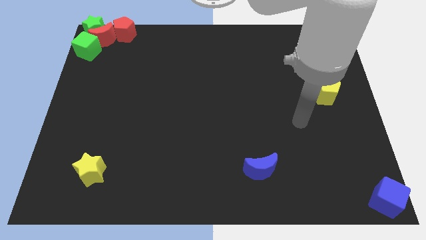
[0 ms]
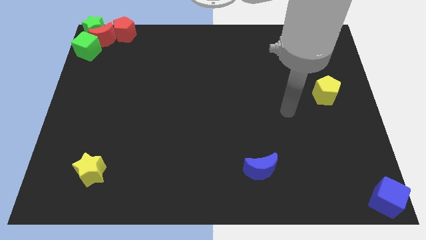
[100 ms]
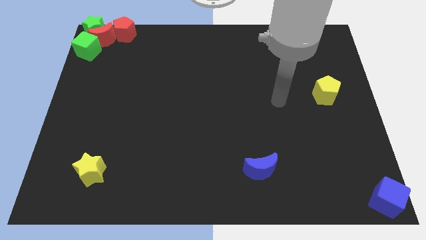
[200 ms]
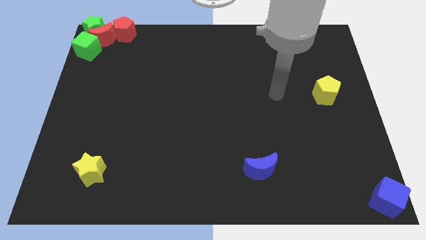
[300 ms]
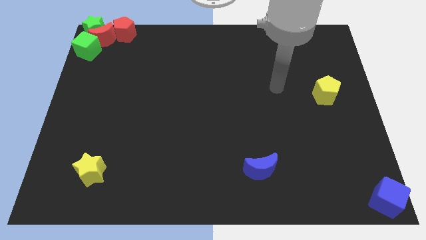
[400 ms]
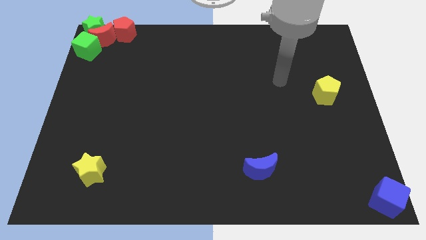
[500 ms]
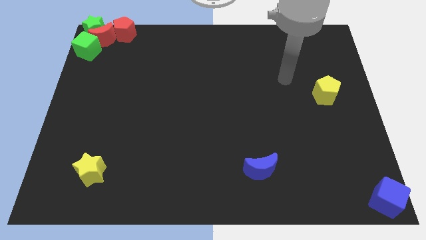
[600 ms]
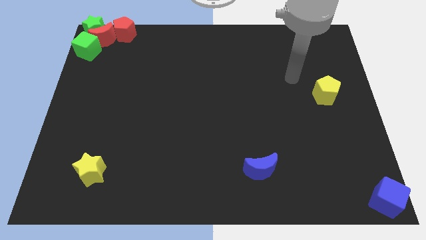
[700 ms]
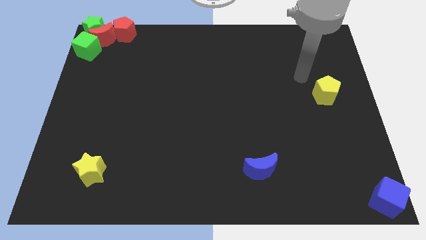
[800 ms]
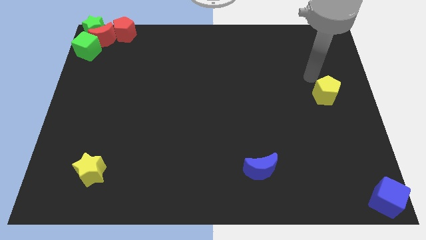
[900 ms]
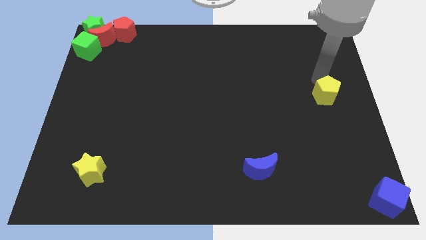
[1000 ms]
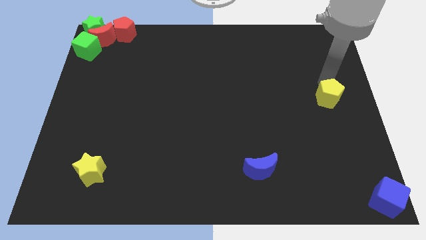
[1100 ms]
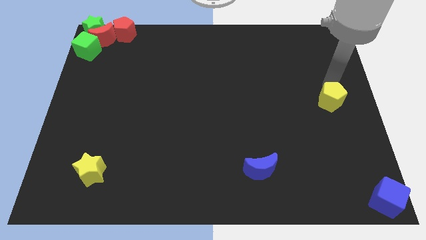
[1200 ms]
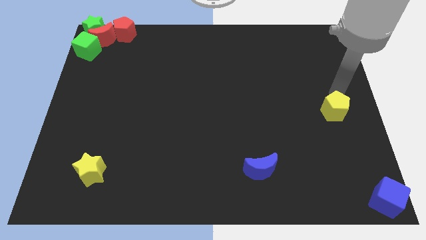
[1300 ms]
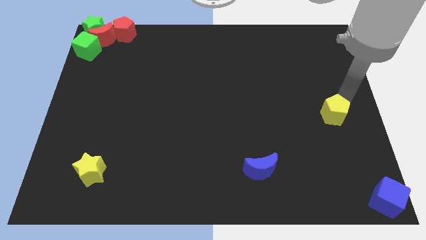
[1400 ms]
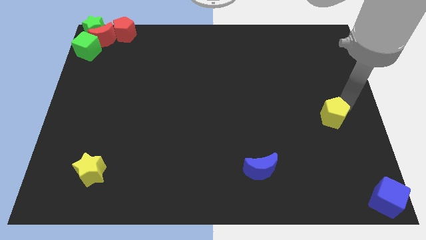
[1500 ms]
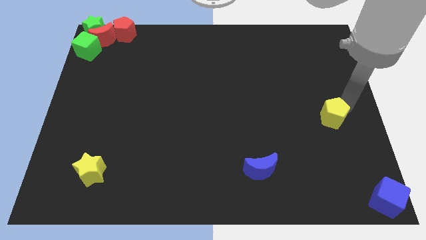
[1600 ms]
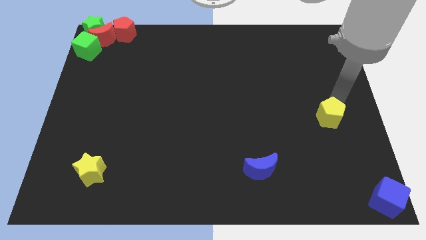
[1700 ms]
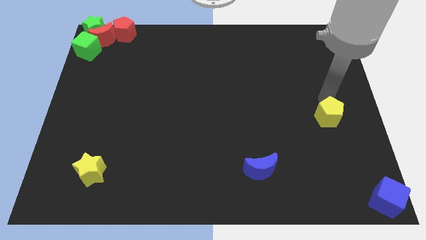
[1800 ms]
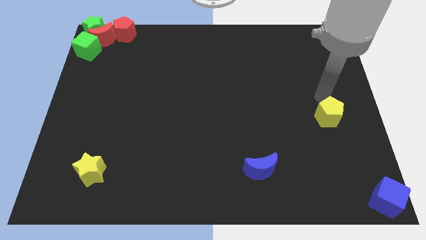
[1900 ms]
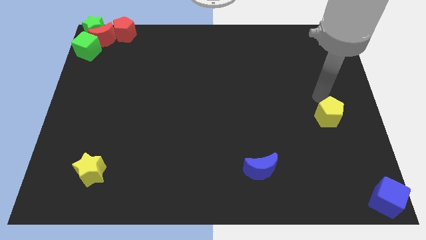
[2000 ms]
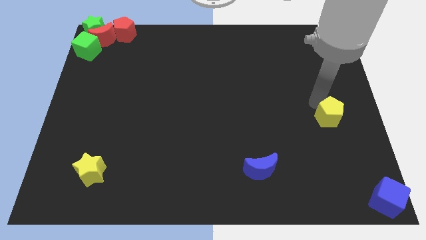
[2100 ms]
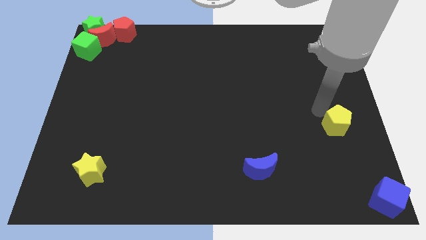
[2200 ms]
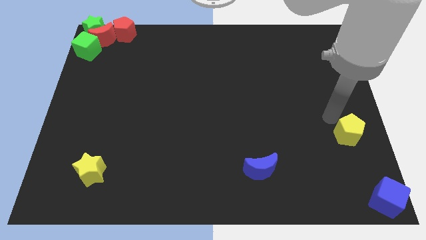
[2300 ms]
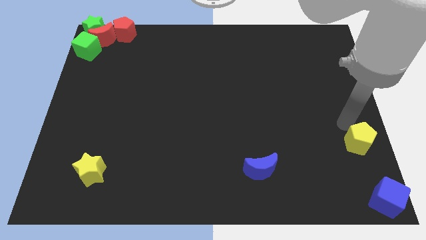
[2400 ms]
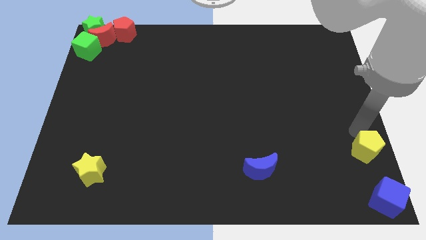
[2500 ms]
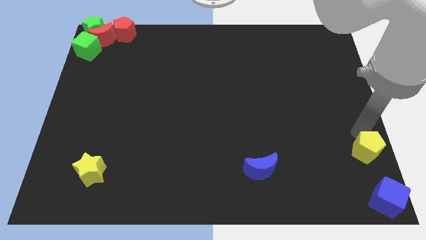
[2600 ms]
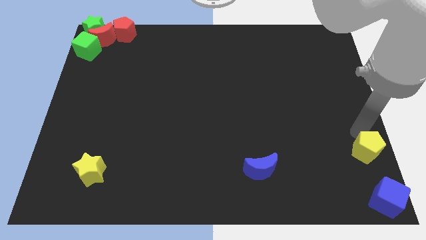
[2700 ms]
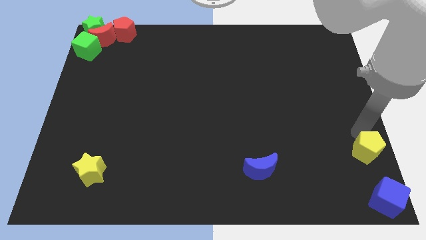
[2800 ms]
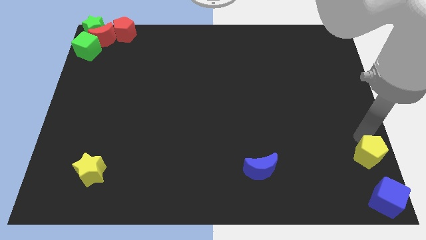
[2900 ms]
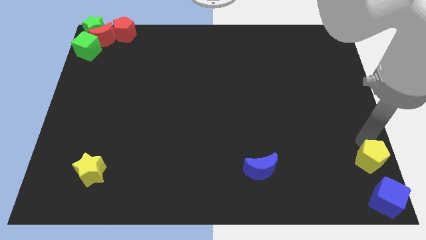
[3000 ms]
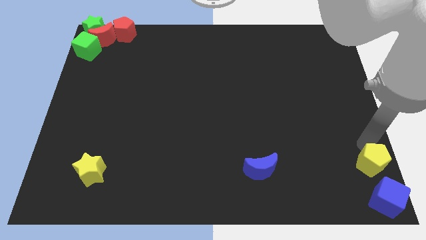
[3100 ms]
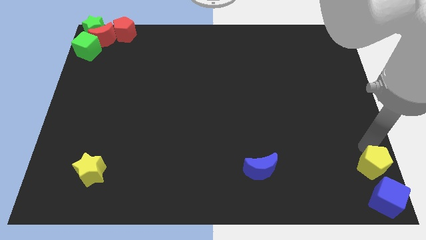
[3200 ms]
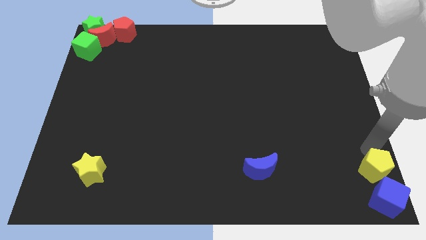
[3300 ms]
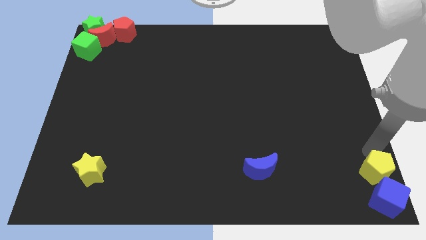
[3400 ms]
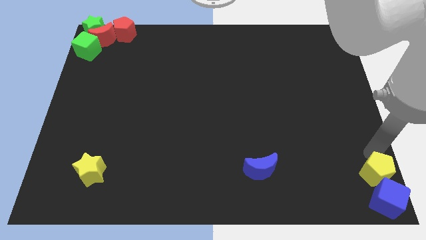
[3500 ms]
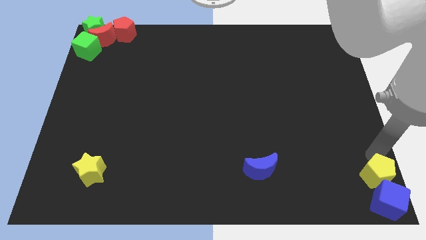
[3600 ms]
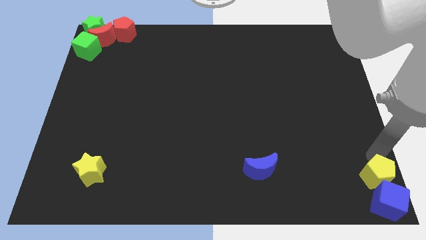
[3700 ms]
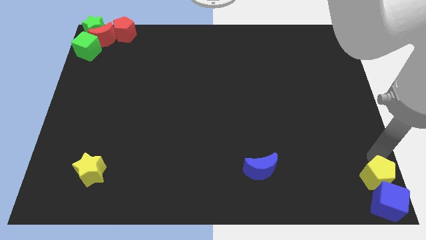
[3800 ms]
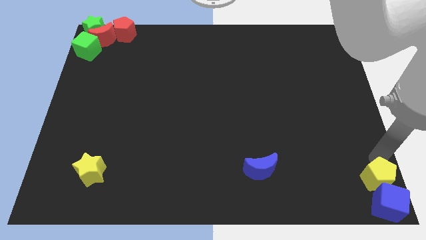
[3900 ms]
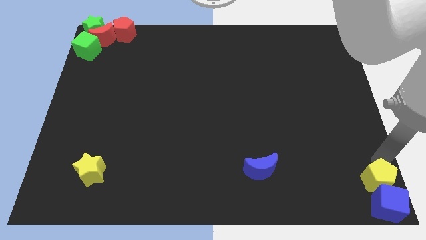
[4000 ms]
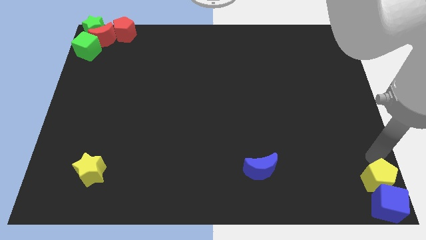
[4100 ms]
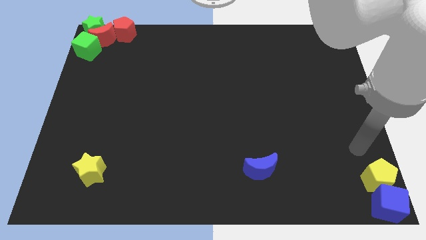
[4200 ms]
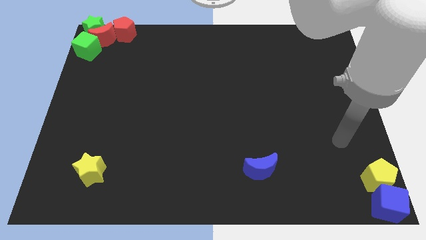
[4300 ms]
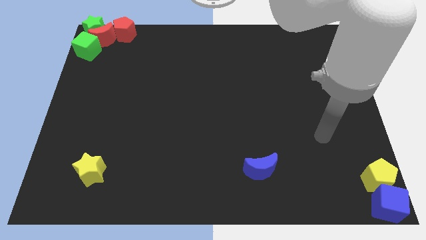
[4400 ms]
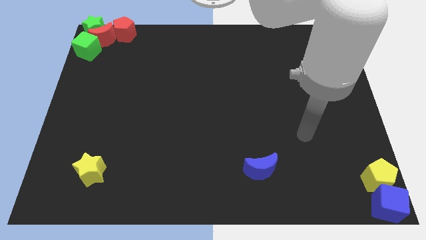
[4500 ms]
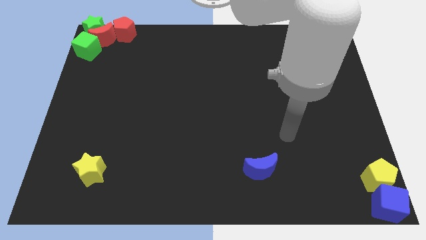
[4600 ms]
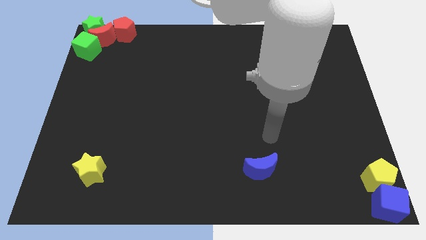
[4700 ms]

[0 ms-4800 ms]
push the yellow pentagon into the blue cube

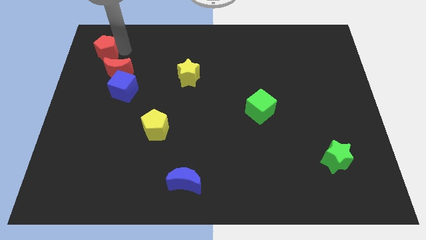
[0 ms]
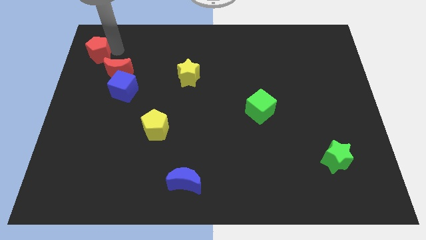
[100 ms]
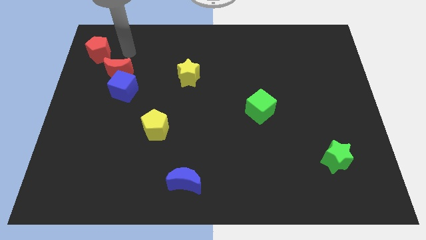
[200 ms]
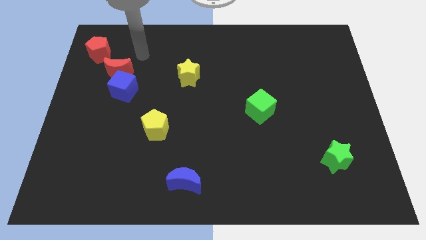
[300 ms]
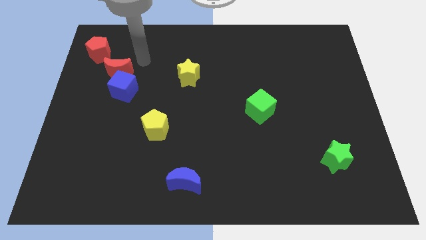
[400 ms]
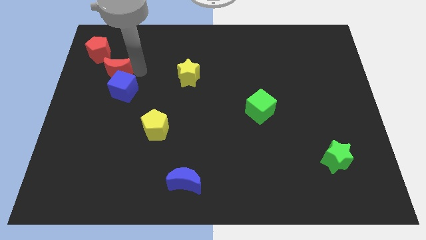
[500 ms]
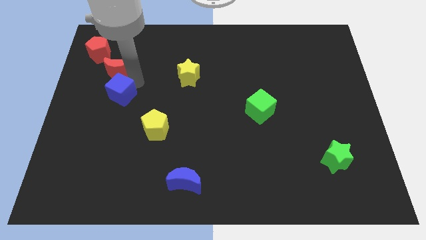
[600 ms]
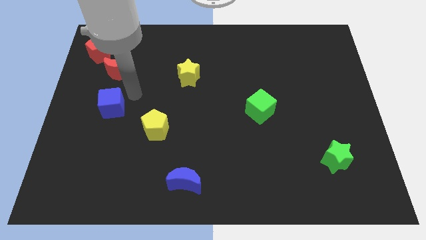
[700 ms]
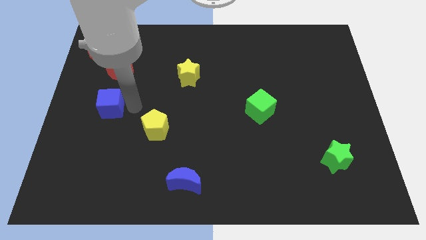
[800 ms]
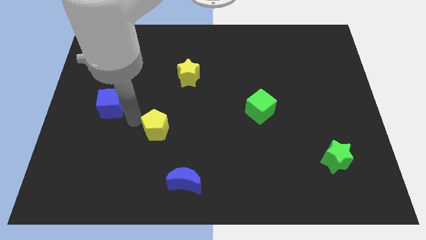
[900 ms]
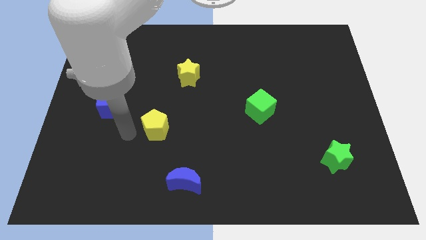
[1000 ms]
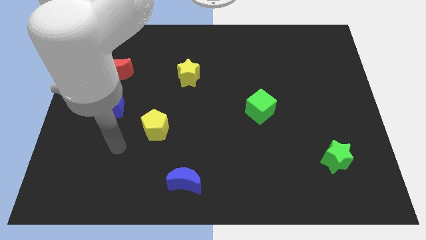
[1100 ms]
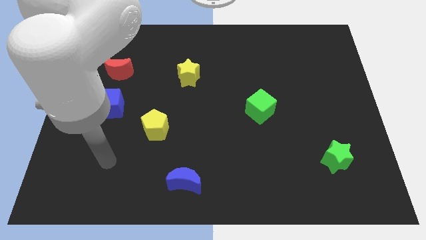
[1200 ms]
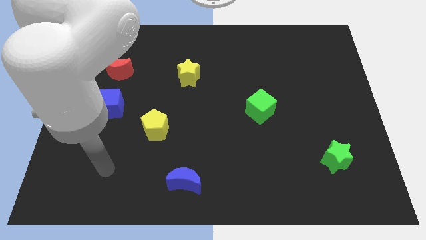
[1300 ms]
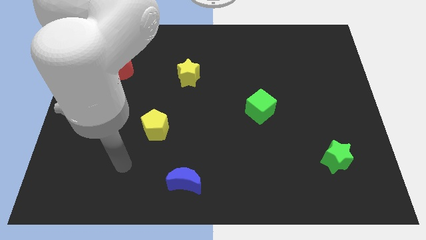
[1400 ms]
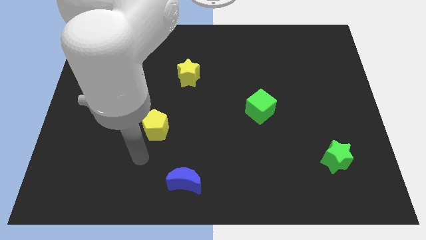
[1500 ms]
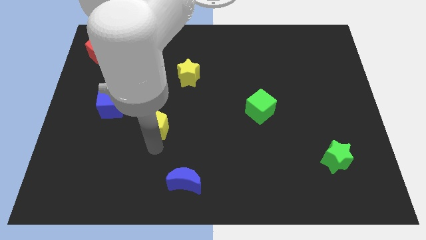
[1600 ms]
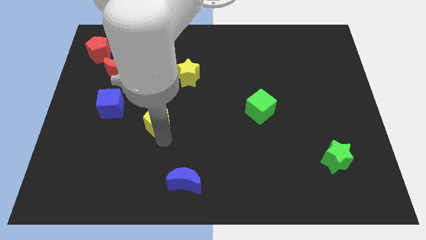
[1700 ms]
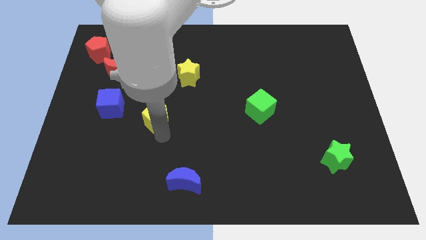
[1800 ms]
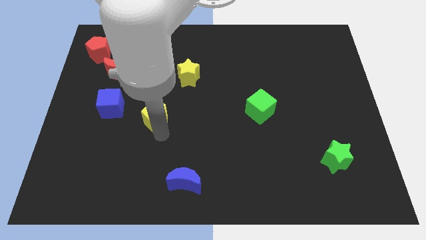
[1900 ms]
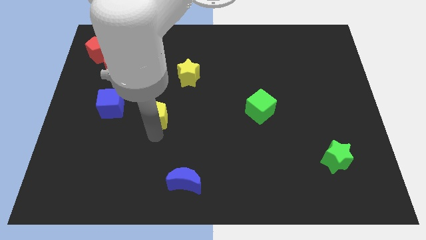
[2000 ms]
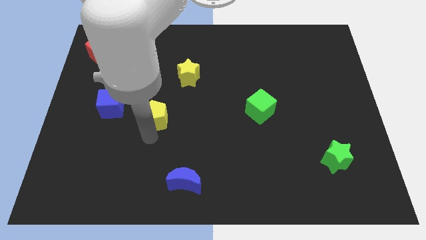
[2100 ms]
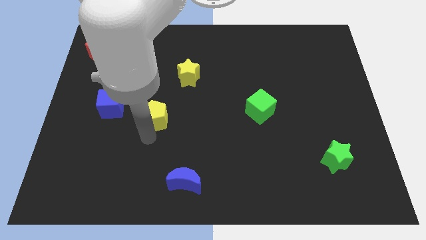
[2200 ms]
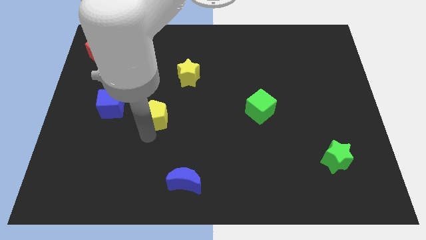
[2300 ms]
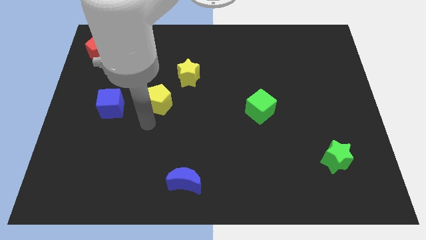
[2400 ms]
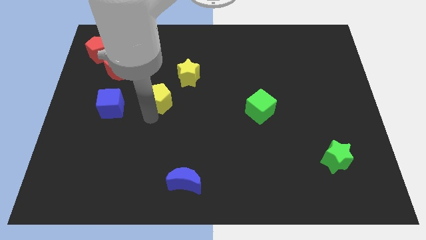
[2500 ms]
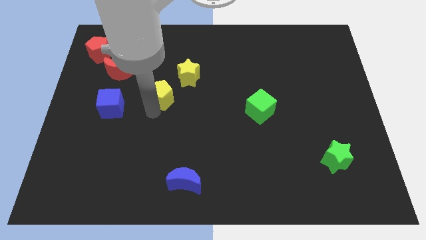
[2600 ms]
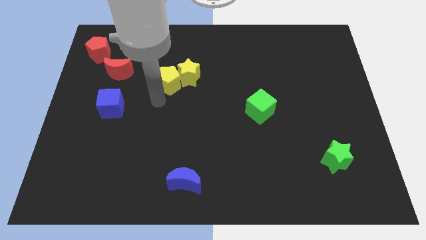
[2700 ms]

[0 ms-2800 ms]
move your arm away from the red pentagon

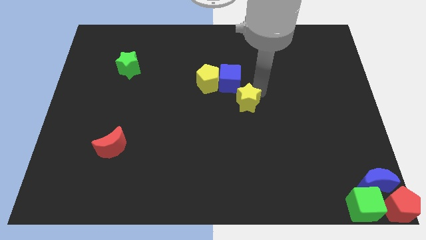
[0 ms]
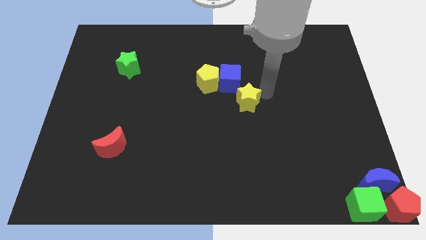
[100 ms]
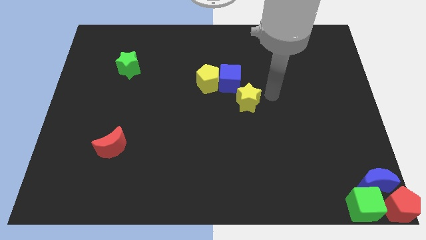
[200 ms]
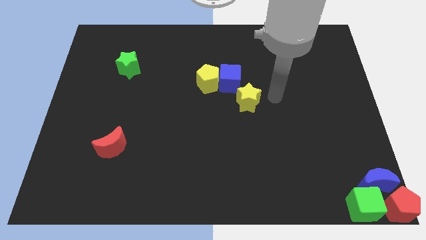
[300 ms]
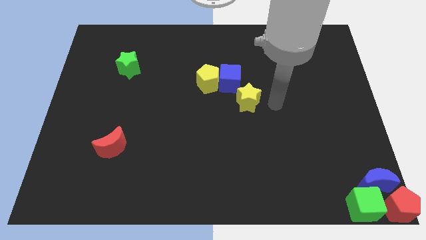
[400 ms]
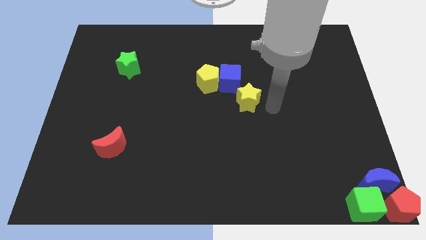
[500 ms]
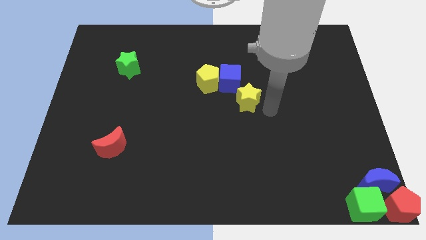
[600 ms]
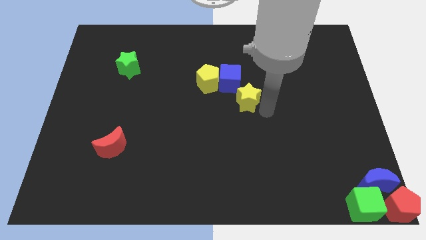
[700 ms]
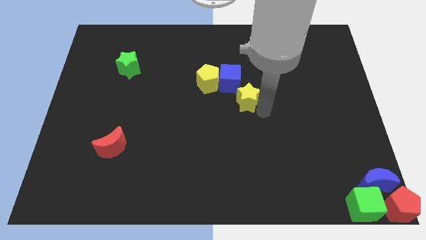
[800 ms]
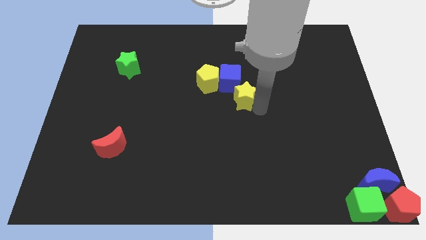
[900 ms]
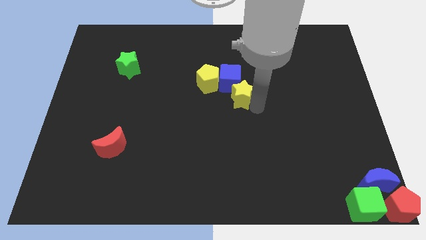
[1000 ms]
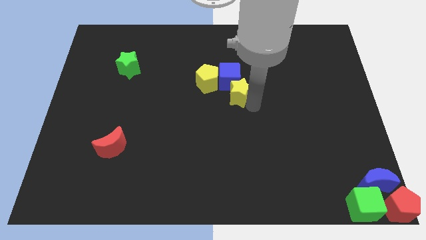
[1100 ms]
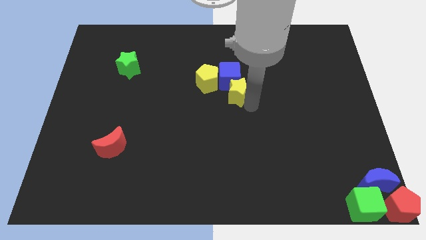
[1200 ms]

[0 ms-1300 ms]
push the yellow star into the blue cube

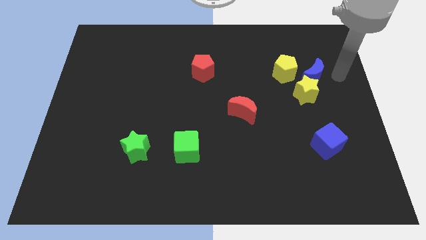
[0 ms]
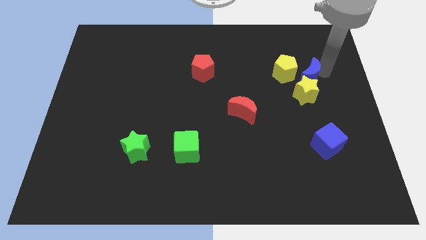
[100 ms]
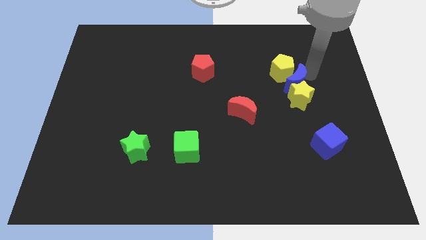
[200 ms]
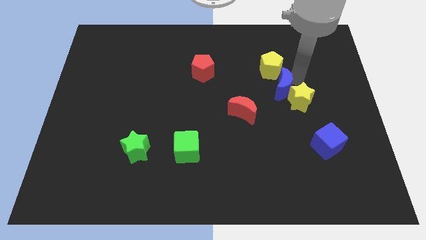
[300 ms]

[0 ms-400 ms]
place the blue crescent in between the yellow blocks
